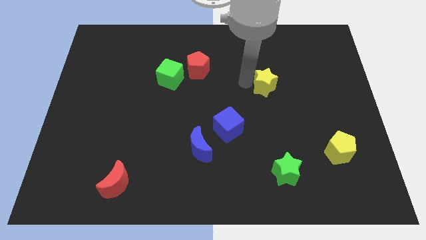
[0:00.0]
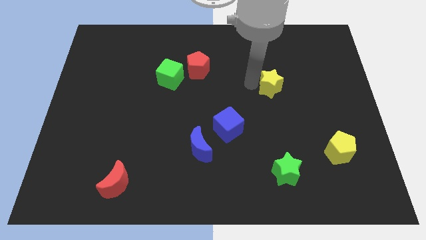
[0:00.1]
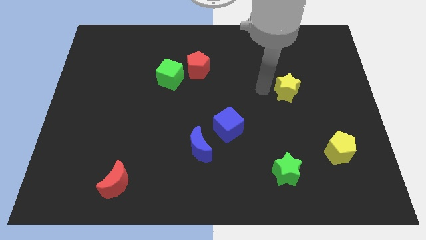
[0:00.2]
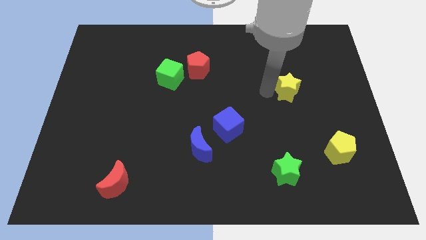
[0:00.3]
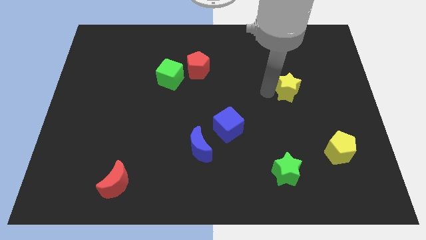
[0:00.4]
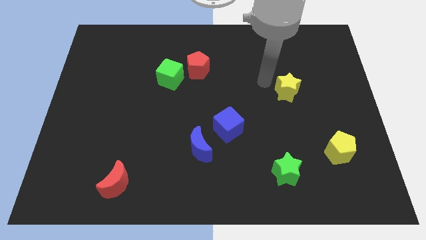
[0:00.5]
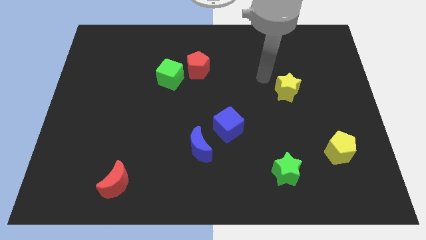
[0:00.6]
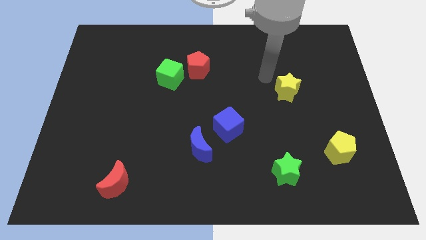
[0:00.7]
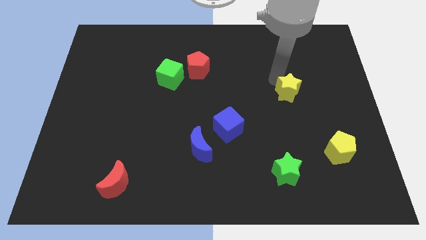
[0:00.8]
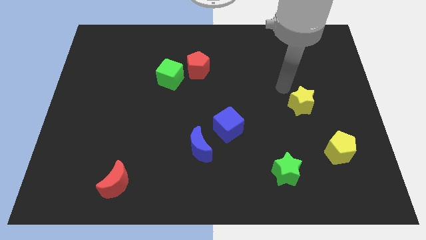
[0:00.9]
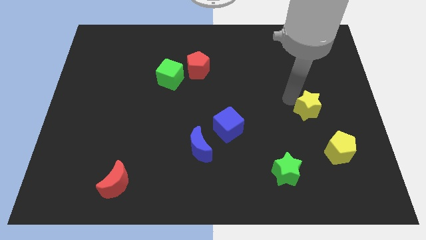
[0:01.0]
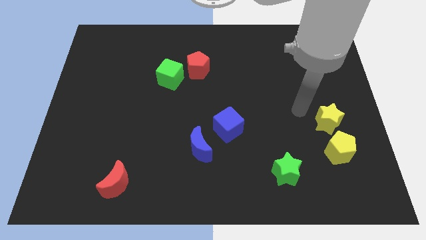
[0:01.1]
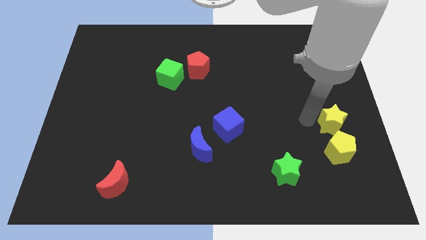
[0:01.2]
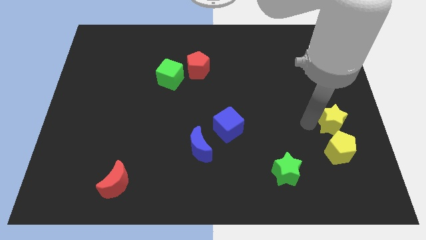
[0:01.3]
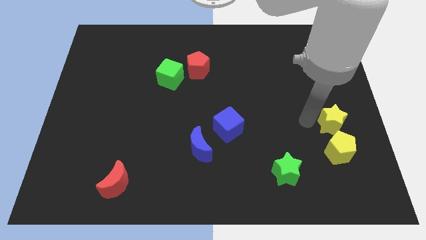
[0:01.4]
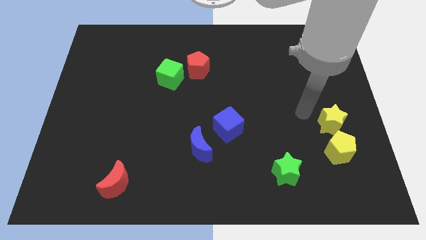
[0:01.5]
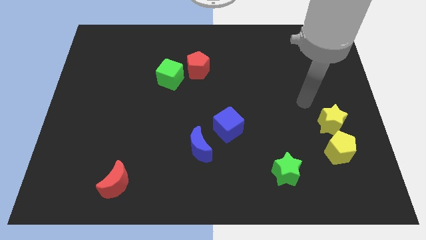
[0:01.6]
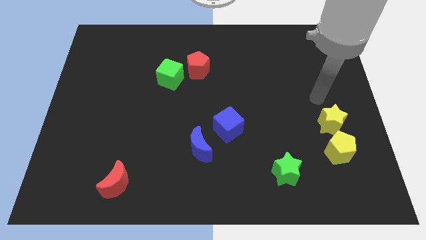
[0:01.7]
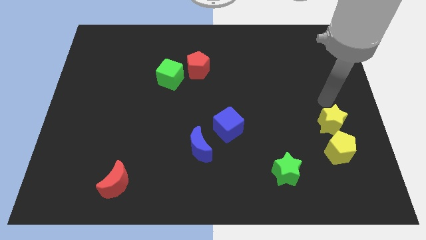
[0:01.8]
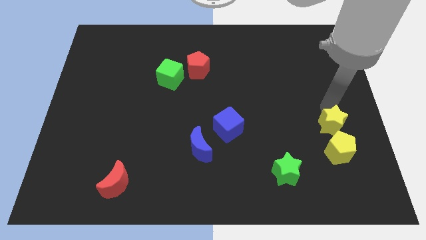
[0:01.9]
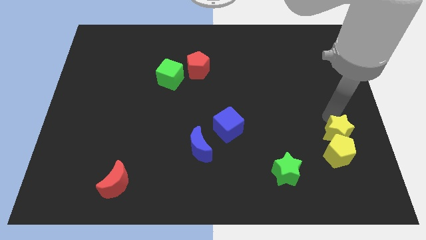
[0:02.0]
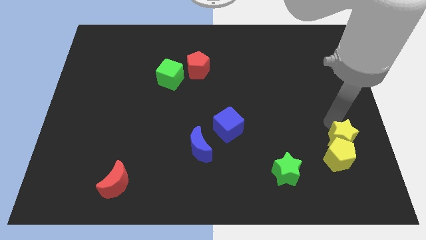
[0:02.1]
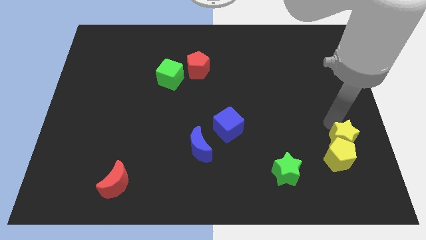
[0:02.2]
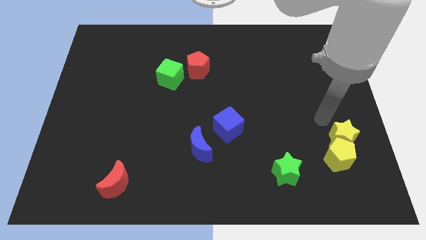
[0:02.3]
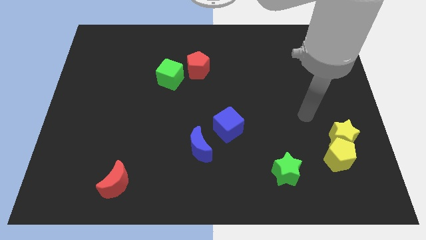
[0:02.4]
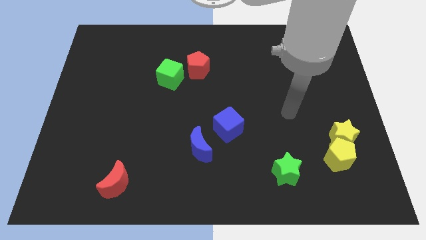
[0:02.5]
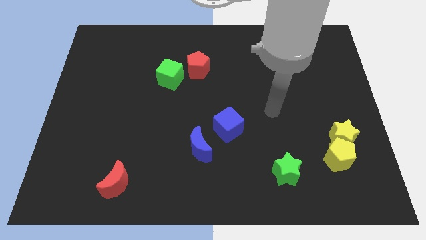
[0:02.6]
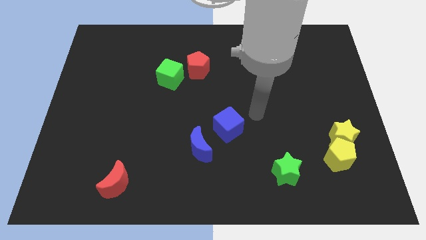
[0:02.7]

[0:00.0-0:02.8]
move the yellow star into the yellow pentagon

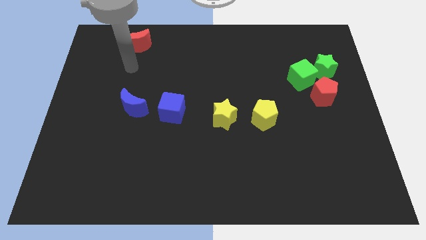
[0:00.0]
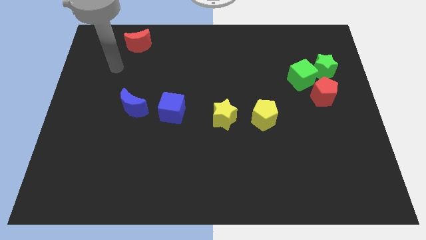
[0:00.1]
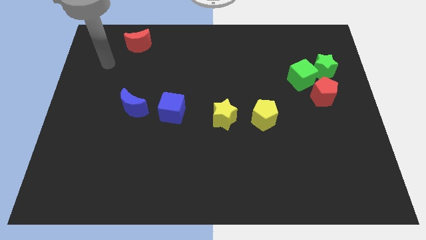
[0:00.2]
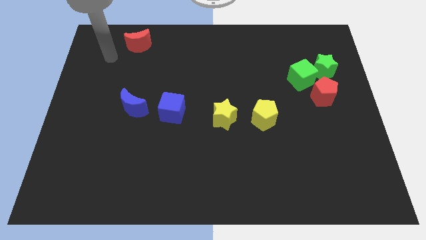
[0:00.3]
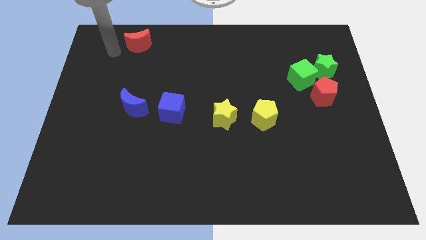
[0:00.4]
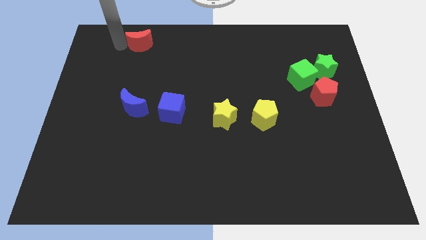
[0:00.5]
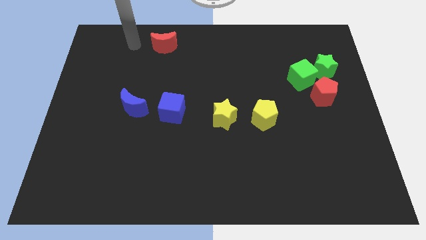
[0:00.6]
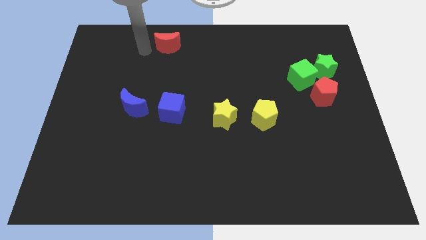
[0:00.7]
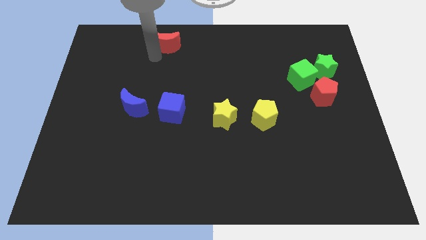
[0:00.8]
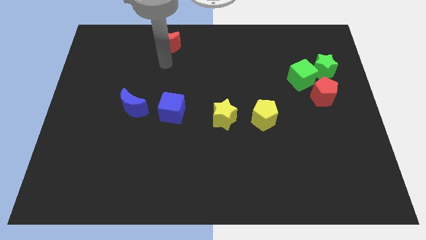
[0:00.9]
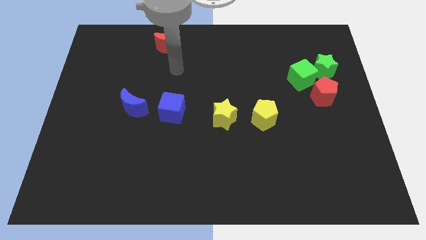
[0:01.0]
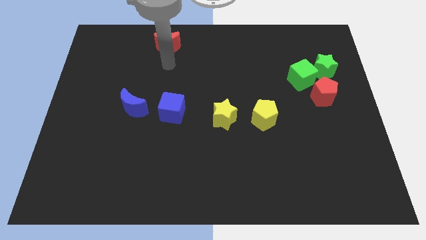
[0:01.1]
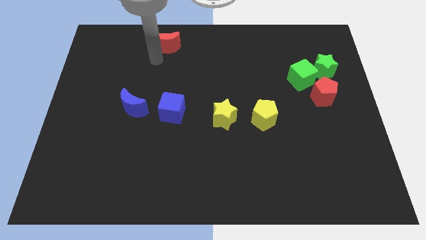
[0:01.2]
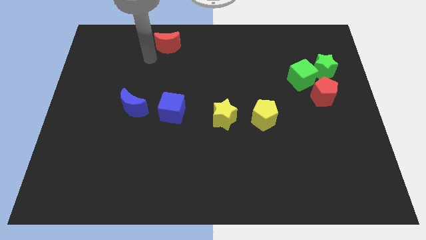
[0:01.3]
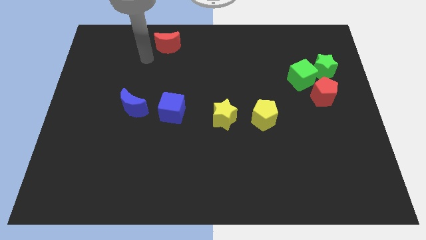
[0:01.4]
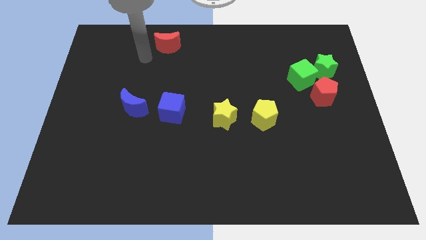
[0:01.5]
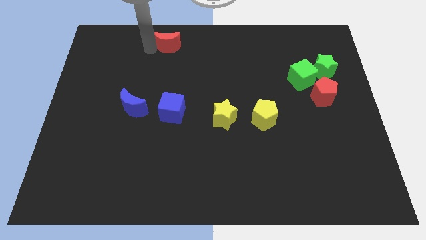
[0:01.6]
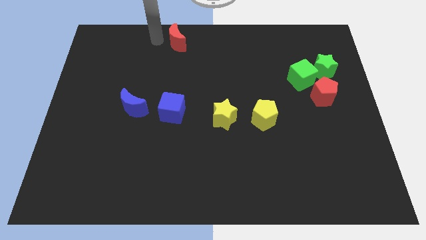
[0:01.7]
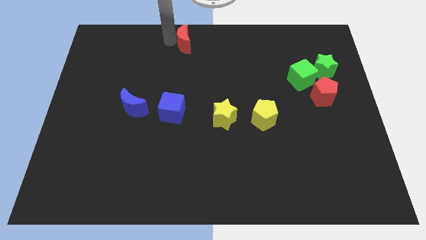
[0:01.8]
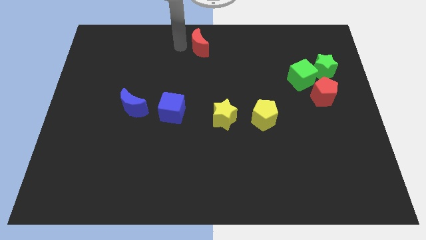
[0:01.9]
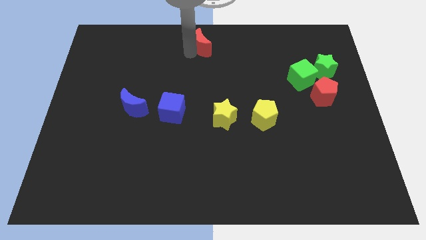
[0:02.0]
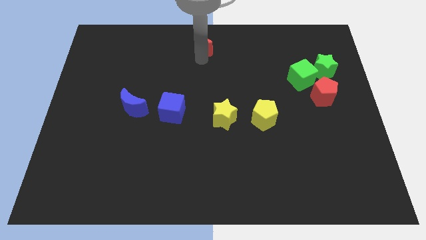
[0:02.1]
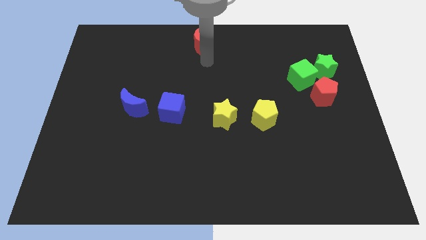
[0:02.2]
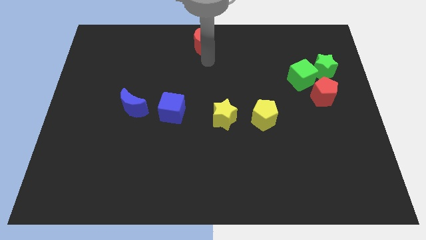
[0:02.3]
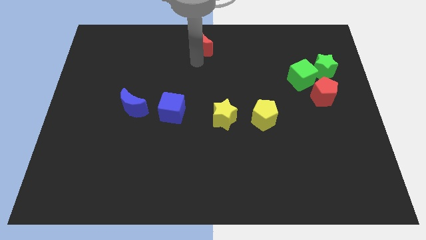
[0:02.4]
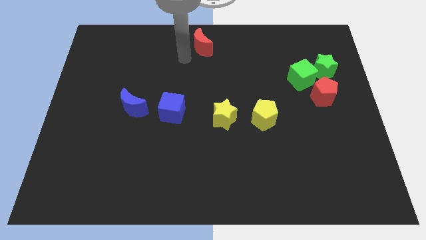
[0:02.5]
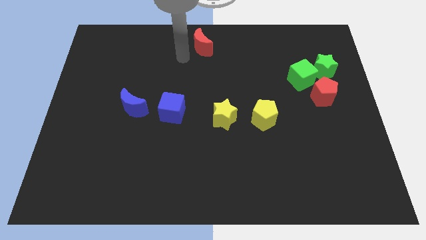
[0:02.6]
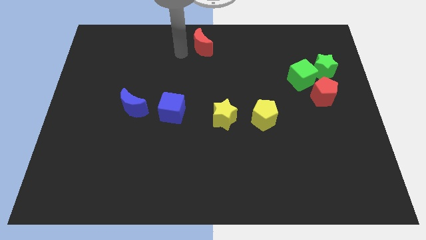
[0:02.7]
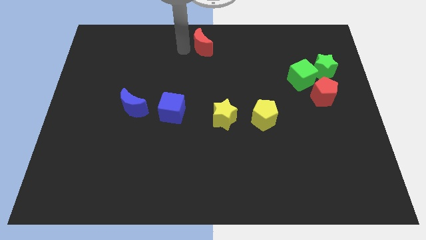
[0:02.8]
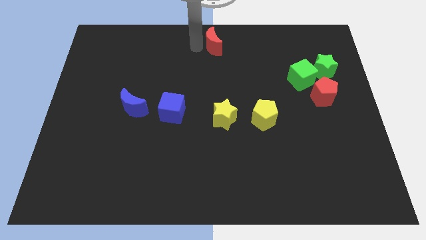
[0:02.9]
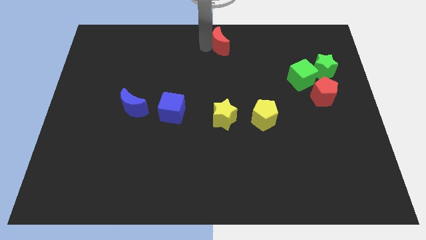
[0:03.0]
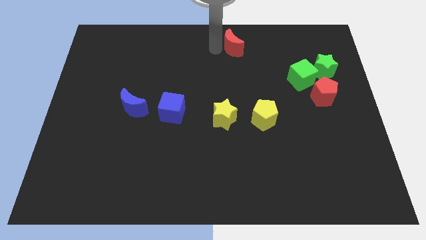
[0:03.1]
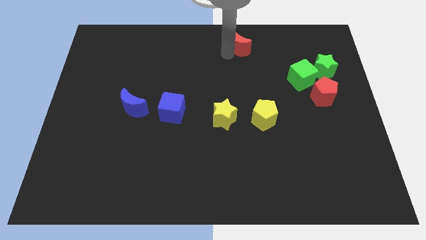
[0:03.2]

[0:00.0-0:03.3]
put the red crescent vertically above the yellow star

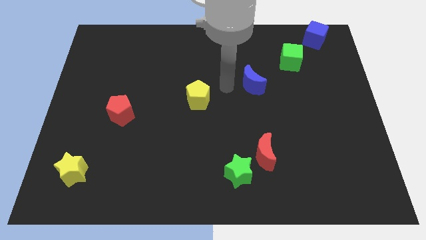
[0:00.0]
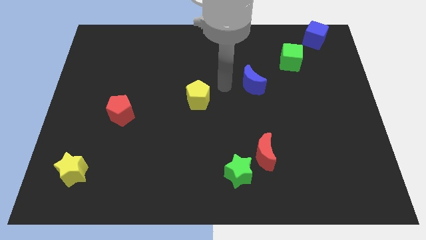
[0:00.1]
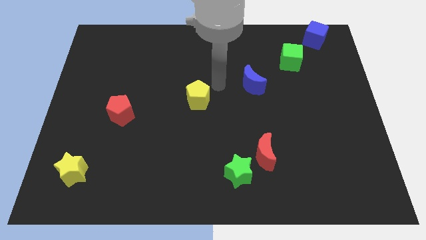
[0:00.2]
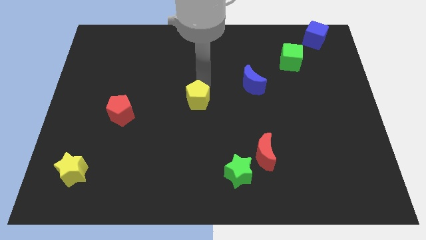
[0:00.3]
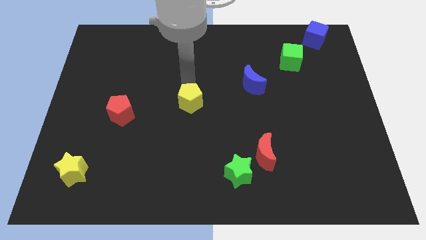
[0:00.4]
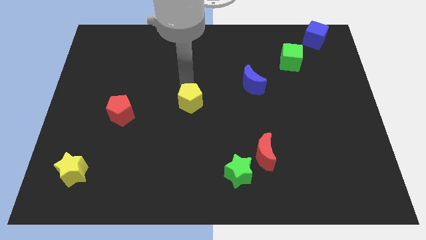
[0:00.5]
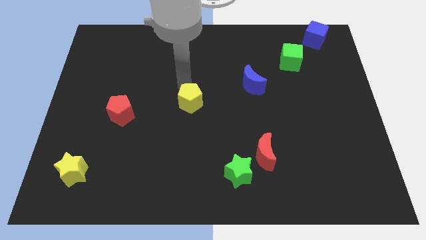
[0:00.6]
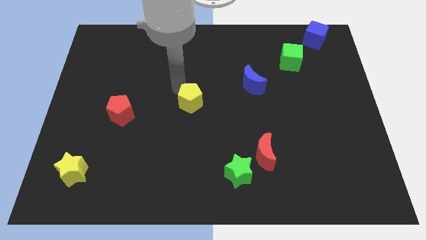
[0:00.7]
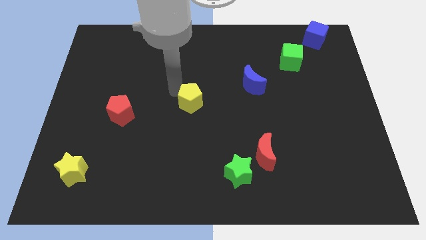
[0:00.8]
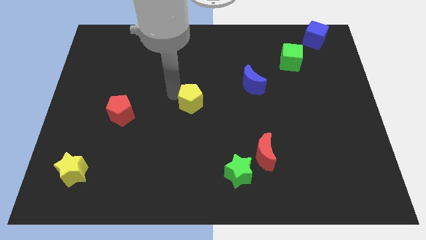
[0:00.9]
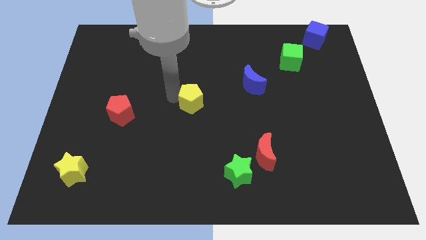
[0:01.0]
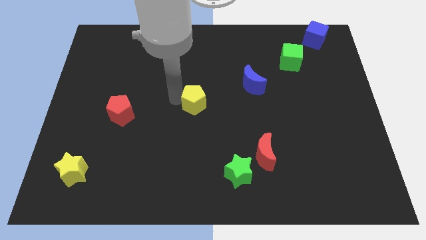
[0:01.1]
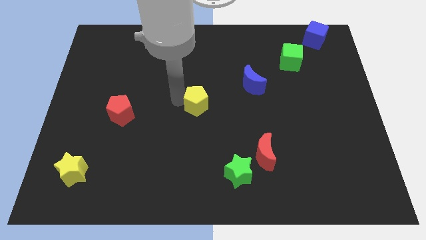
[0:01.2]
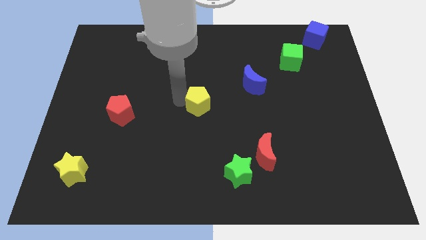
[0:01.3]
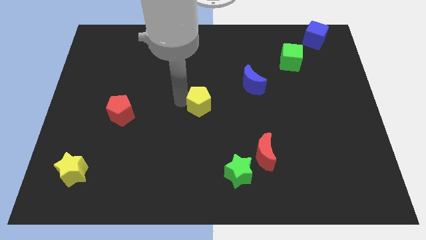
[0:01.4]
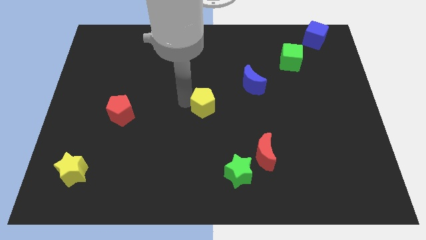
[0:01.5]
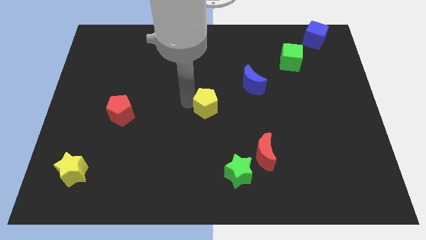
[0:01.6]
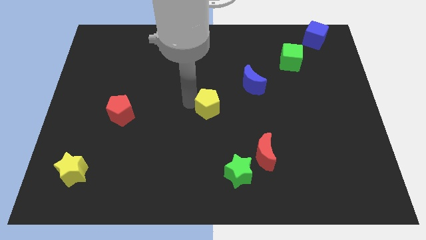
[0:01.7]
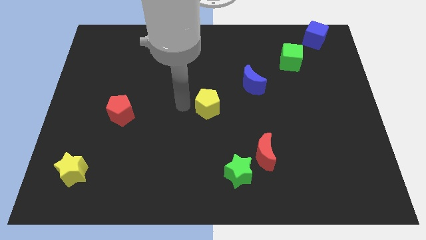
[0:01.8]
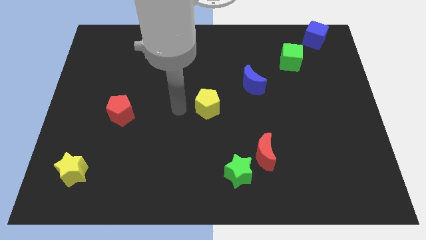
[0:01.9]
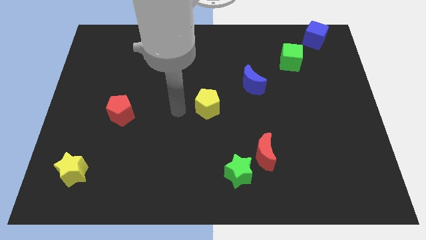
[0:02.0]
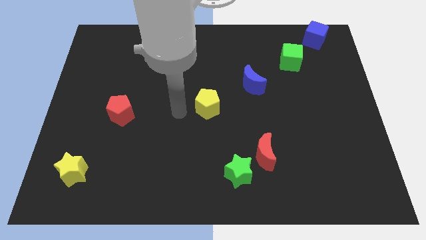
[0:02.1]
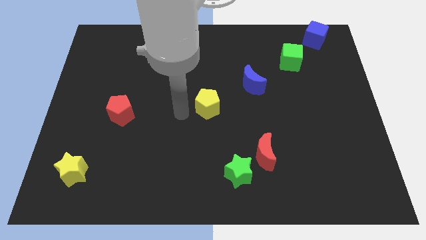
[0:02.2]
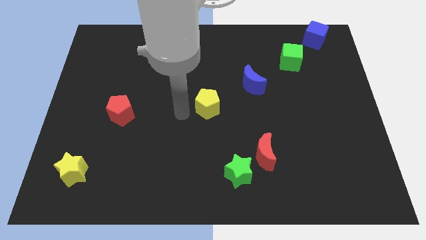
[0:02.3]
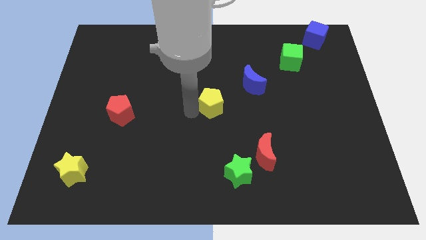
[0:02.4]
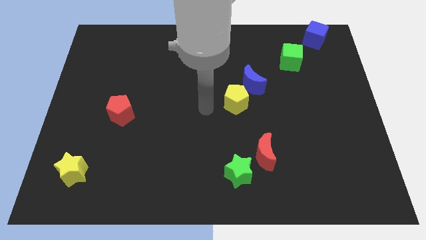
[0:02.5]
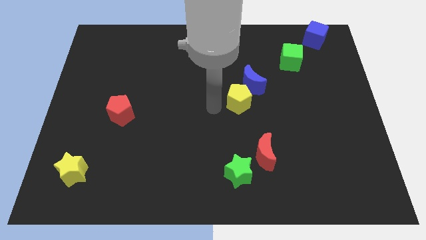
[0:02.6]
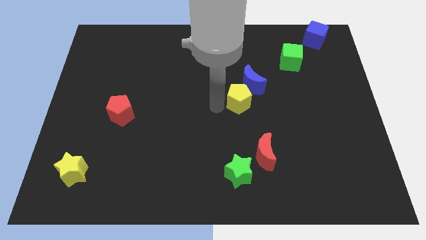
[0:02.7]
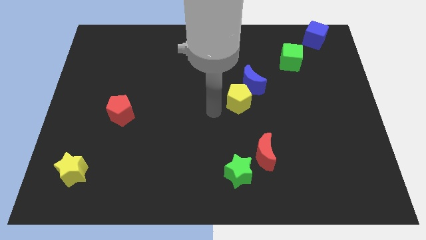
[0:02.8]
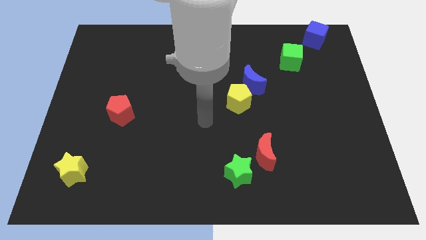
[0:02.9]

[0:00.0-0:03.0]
move the yellow pentagon diagonal below the blue moon
